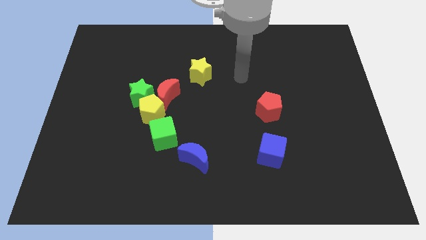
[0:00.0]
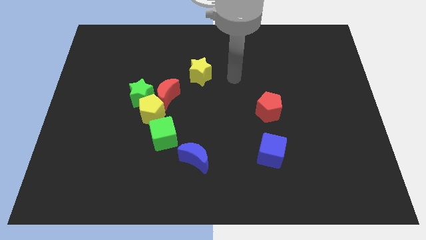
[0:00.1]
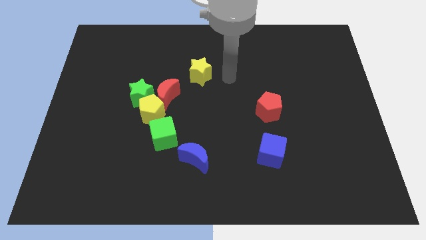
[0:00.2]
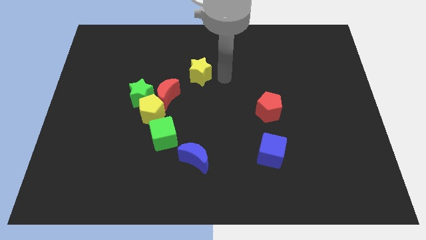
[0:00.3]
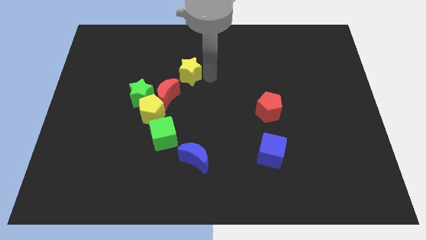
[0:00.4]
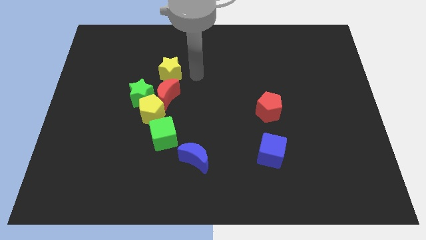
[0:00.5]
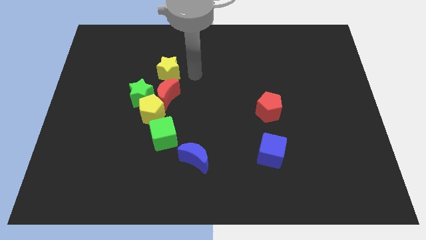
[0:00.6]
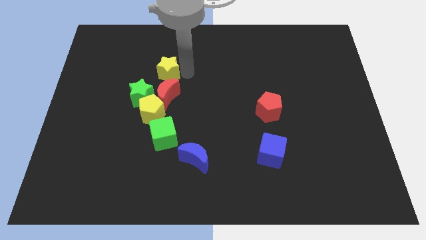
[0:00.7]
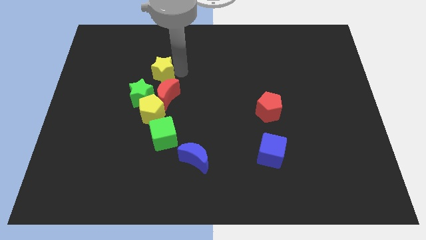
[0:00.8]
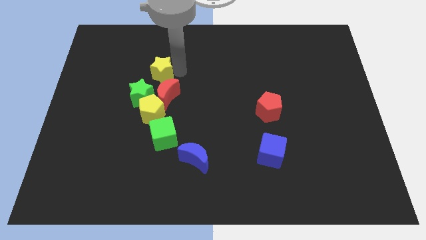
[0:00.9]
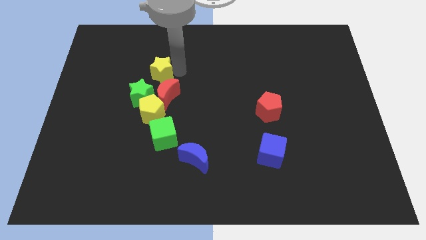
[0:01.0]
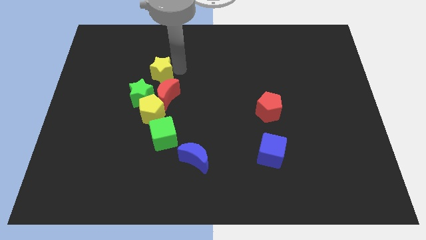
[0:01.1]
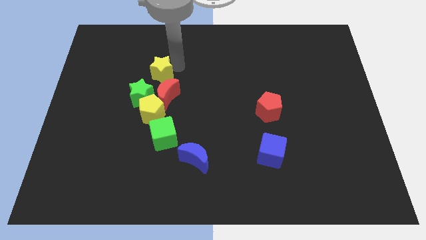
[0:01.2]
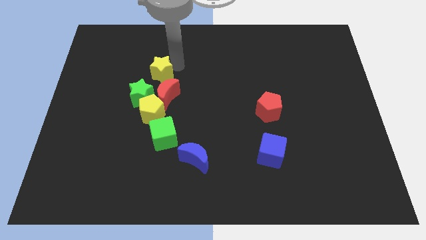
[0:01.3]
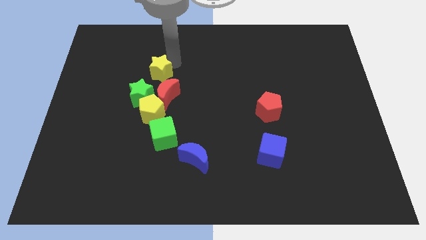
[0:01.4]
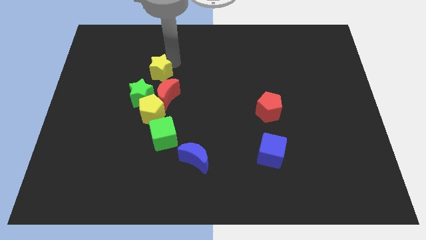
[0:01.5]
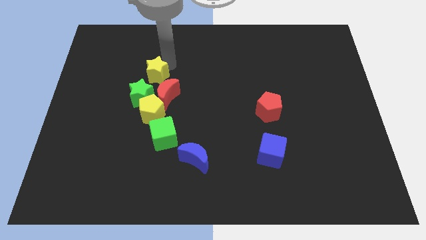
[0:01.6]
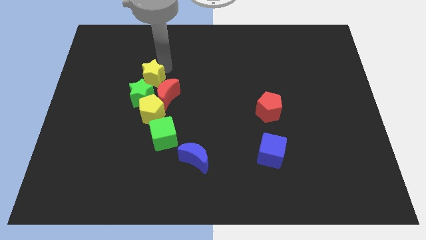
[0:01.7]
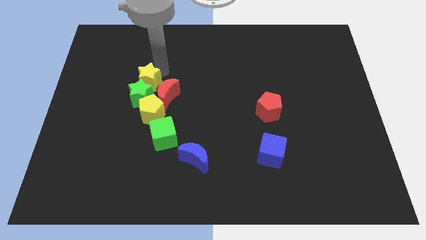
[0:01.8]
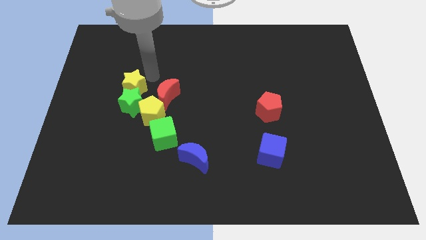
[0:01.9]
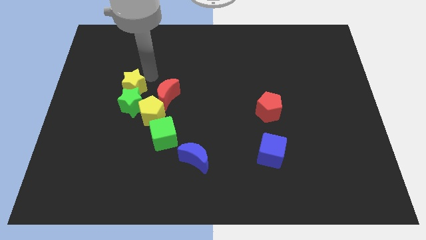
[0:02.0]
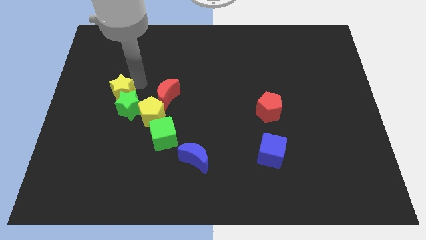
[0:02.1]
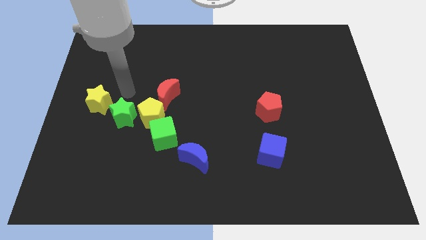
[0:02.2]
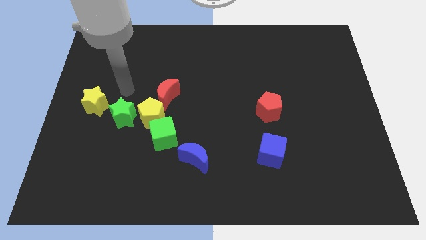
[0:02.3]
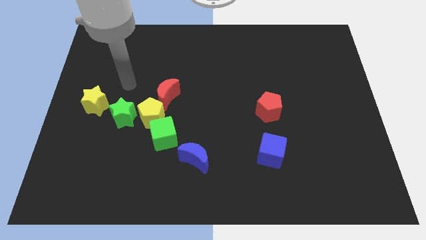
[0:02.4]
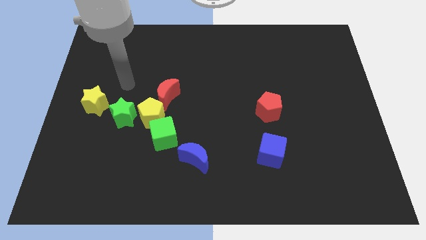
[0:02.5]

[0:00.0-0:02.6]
place yellow star diagonally left to green star

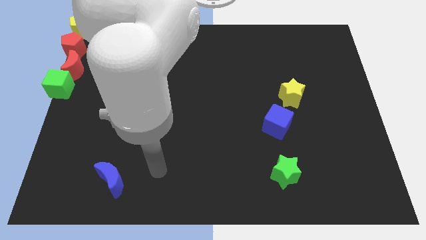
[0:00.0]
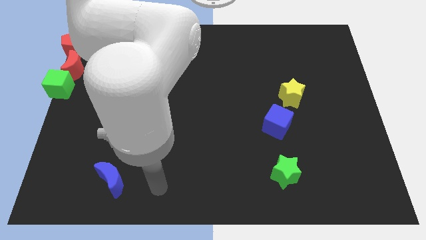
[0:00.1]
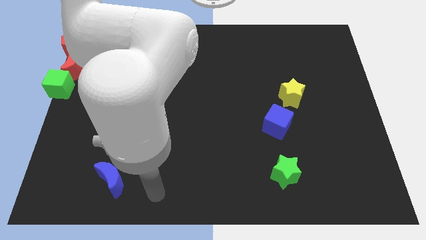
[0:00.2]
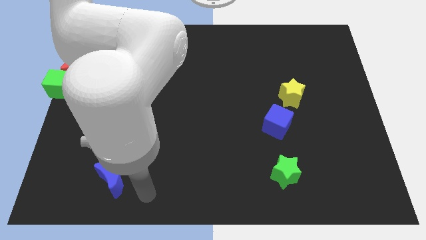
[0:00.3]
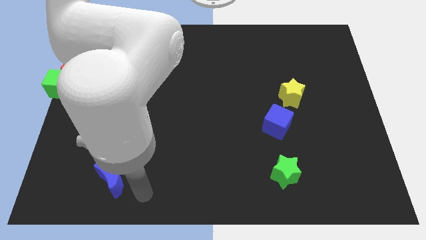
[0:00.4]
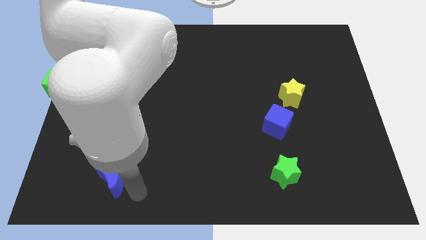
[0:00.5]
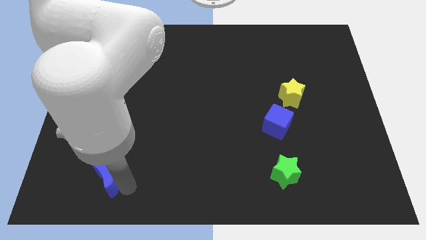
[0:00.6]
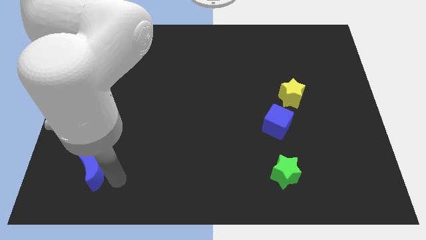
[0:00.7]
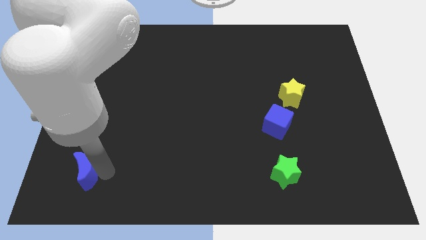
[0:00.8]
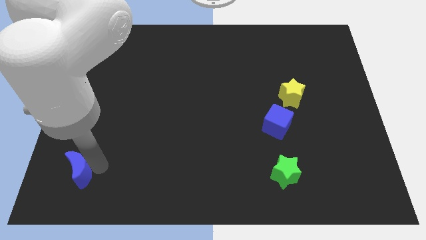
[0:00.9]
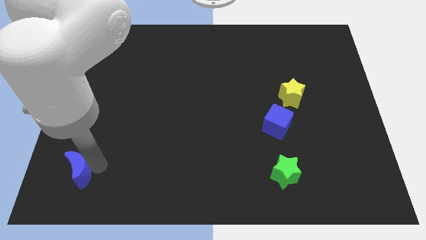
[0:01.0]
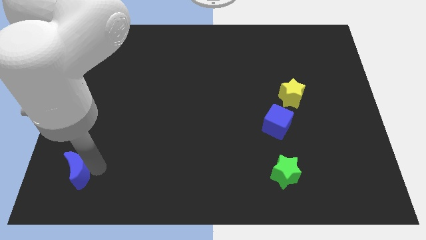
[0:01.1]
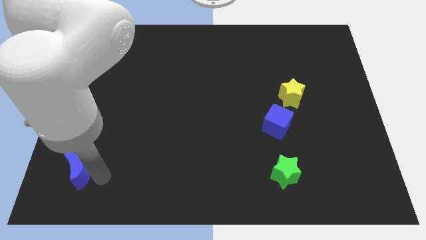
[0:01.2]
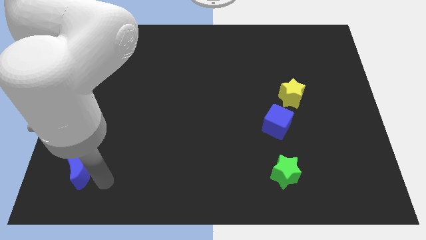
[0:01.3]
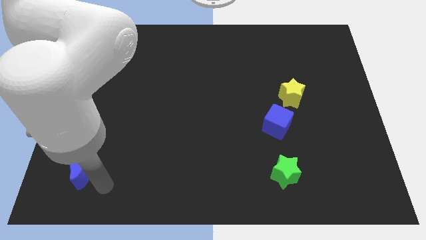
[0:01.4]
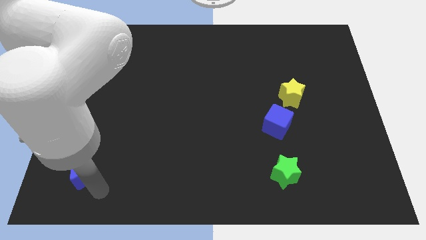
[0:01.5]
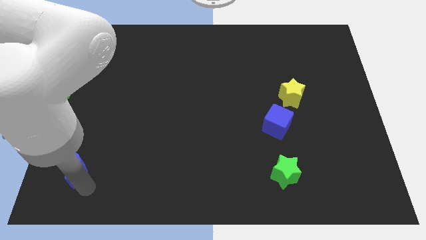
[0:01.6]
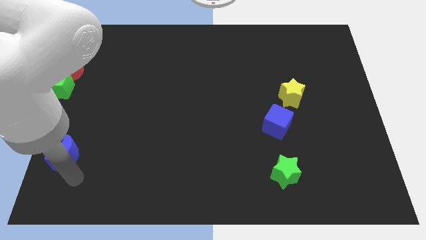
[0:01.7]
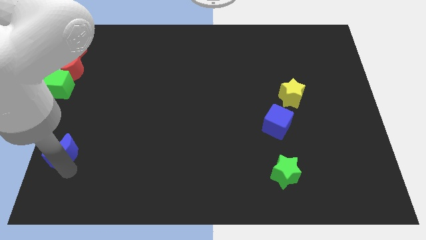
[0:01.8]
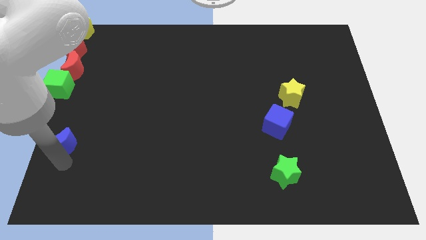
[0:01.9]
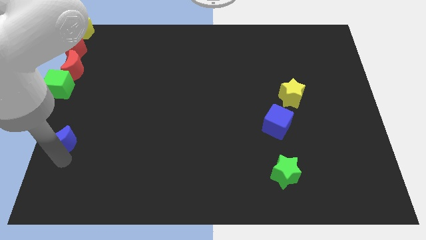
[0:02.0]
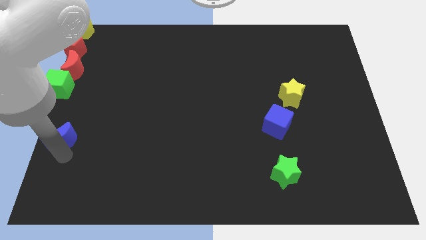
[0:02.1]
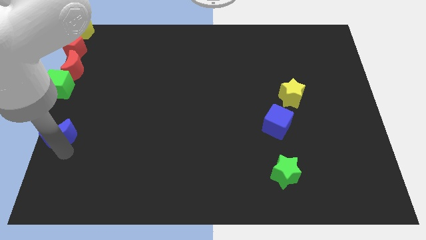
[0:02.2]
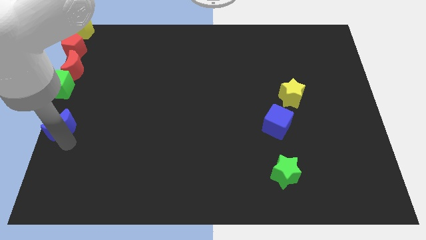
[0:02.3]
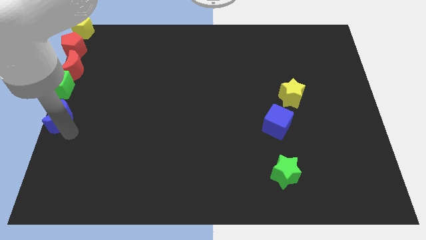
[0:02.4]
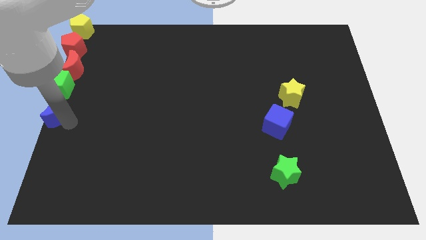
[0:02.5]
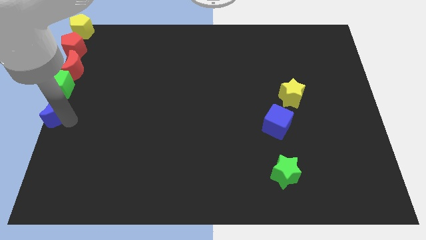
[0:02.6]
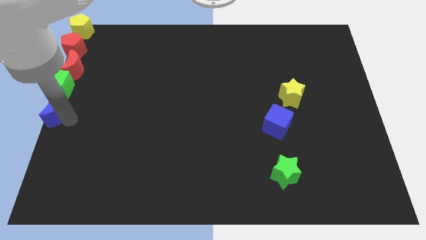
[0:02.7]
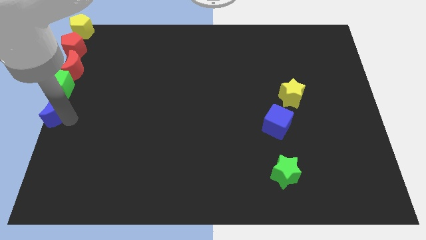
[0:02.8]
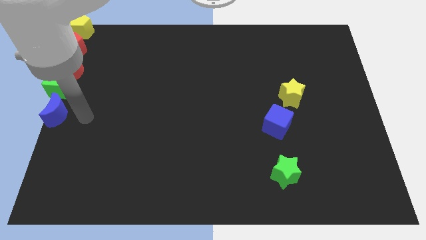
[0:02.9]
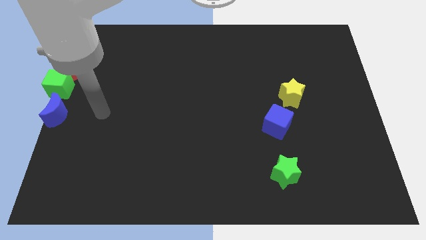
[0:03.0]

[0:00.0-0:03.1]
move the blue crescent to the left center of the board

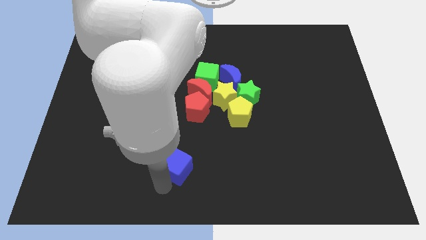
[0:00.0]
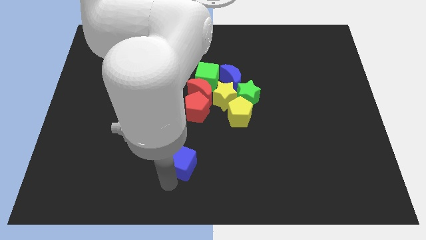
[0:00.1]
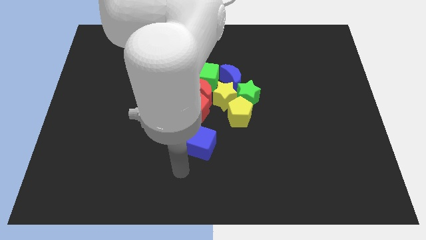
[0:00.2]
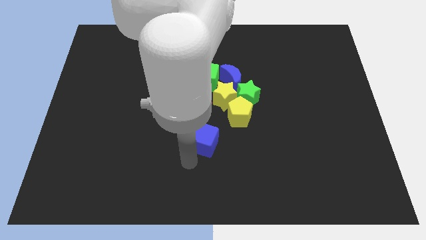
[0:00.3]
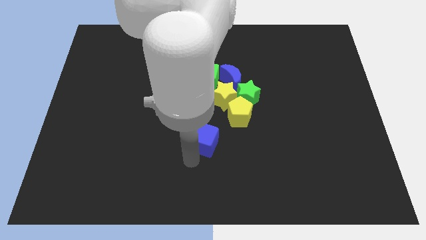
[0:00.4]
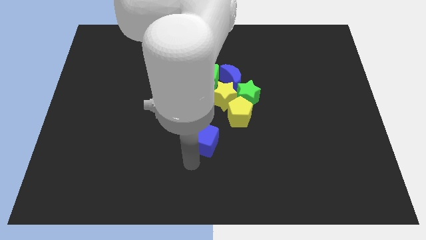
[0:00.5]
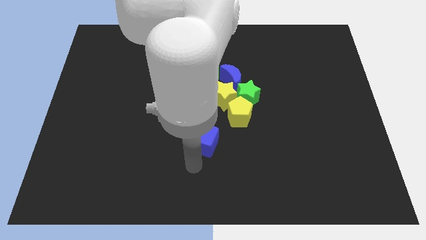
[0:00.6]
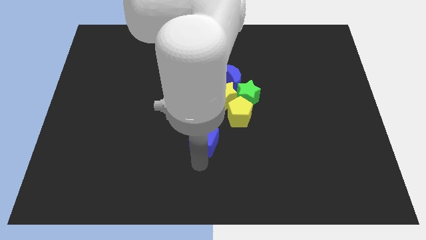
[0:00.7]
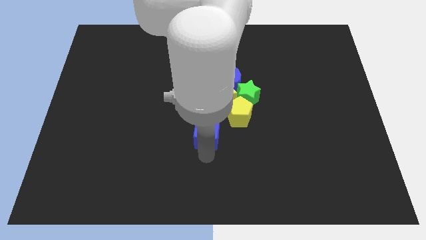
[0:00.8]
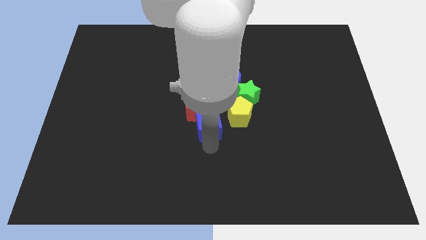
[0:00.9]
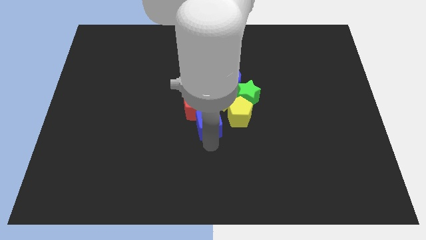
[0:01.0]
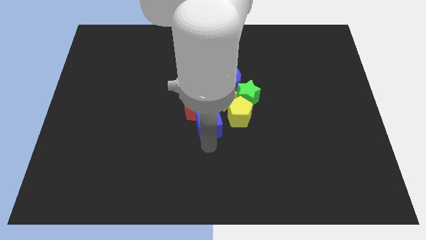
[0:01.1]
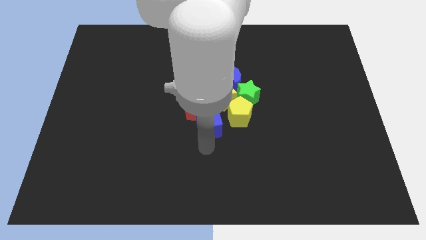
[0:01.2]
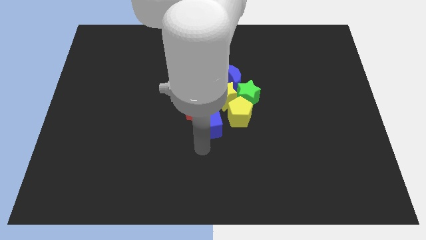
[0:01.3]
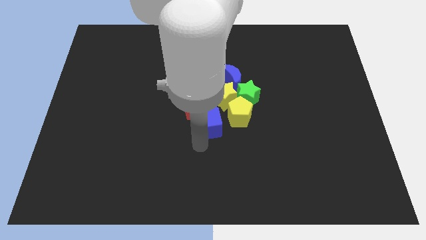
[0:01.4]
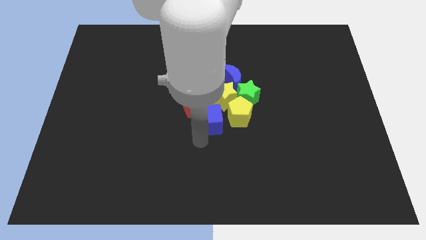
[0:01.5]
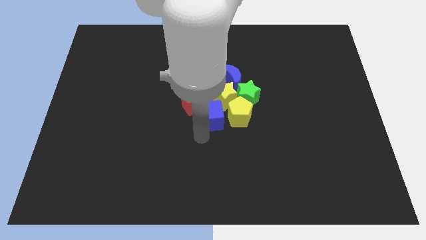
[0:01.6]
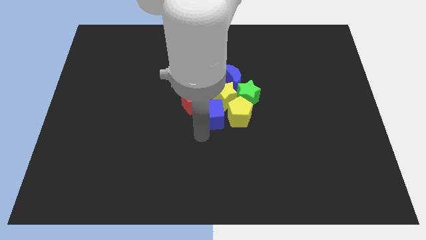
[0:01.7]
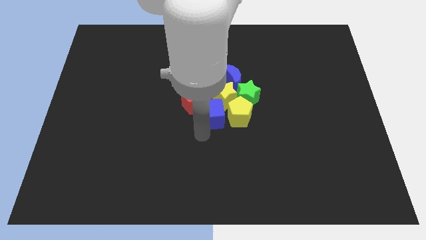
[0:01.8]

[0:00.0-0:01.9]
move the blue cube to the left of the yellow pentagon

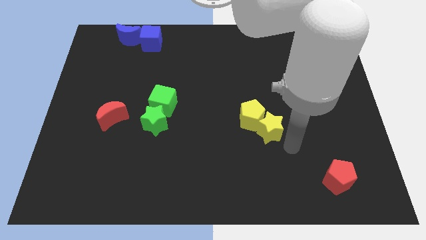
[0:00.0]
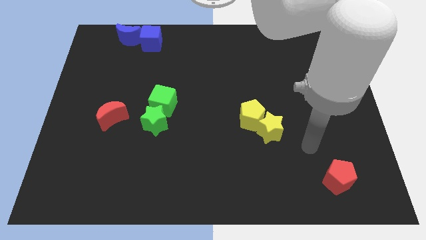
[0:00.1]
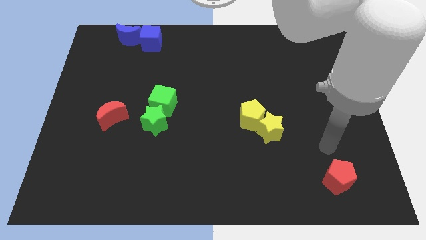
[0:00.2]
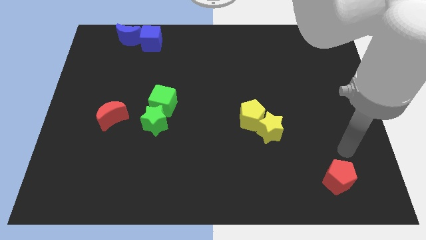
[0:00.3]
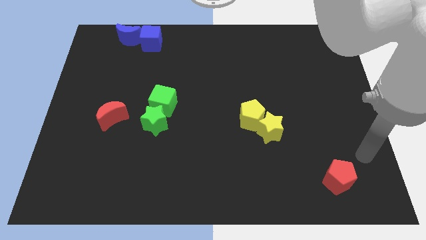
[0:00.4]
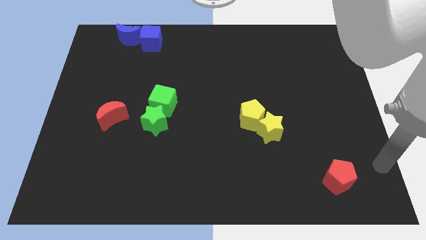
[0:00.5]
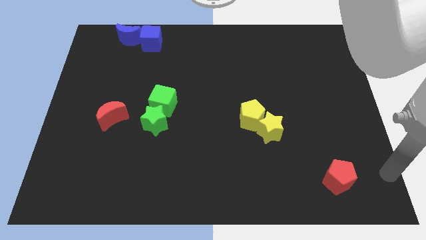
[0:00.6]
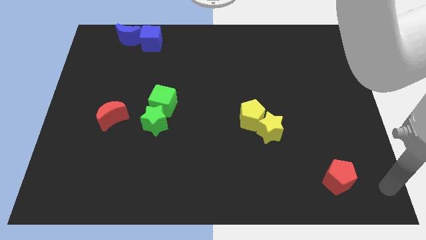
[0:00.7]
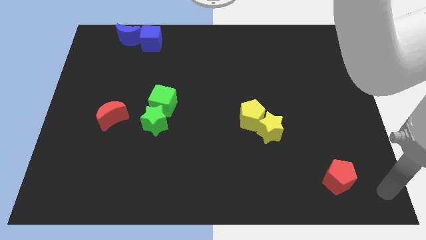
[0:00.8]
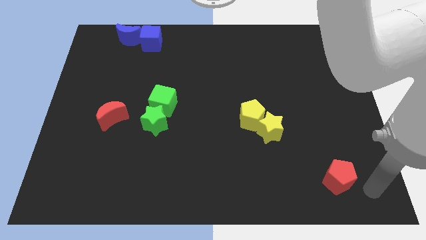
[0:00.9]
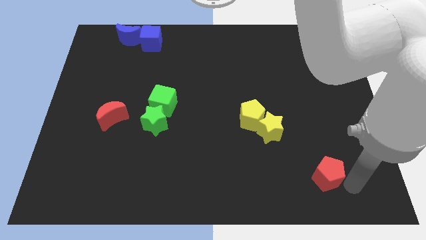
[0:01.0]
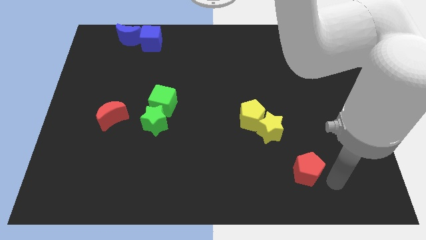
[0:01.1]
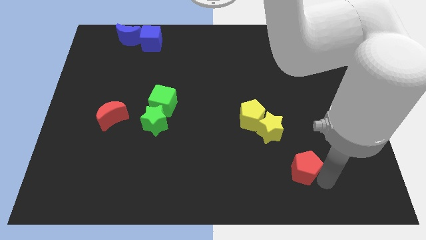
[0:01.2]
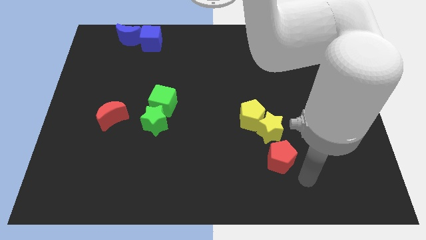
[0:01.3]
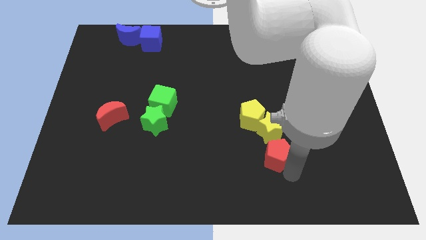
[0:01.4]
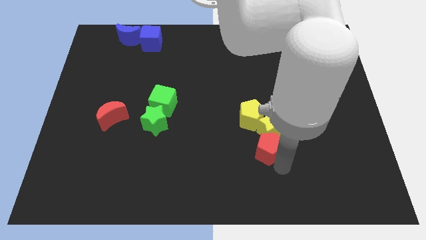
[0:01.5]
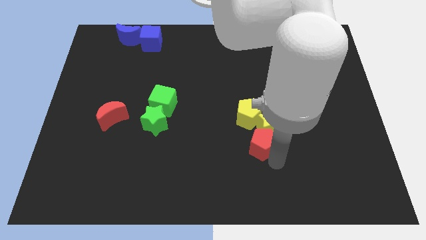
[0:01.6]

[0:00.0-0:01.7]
push the red pentagon into the yellow star
